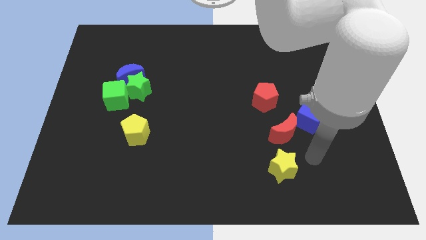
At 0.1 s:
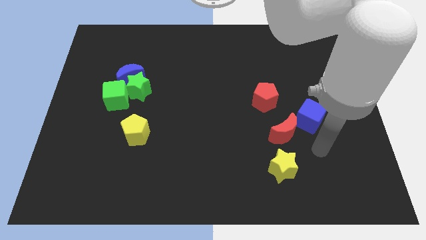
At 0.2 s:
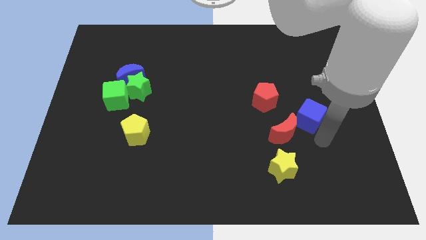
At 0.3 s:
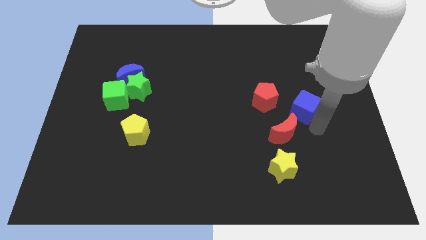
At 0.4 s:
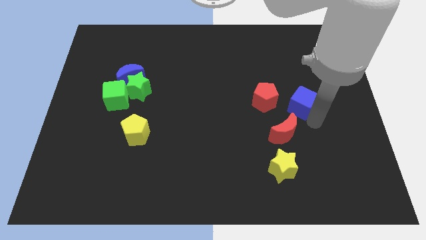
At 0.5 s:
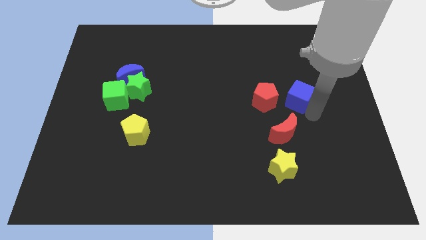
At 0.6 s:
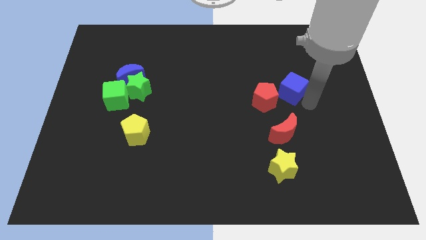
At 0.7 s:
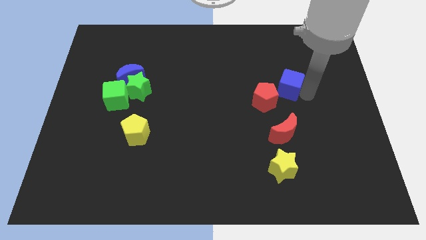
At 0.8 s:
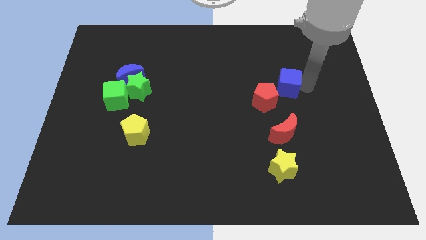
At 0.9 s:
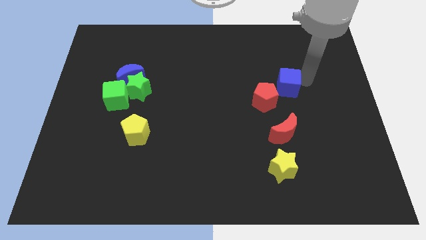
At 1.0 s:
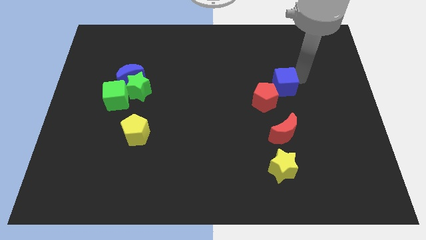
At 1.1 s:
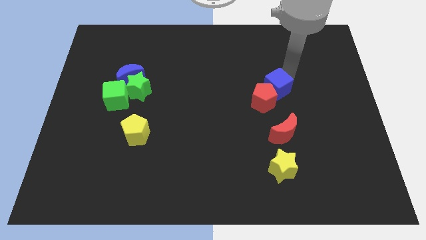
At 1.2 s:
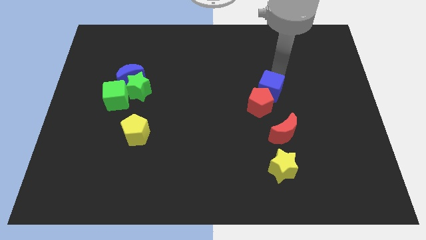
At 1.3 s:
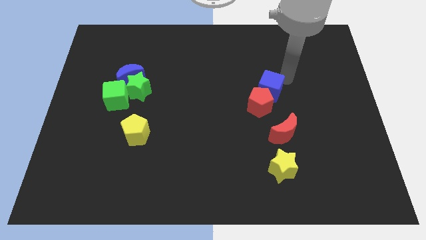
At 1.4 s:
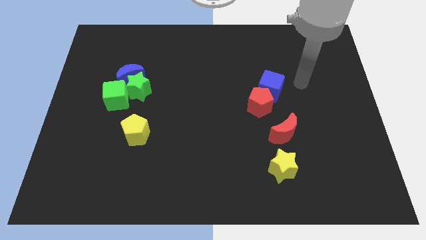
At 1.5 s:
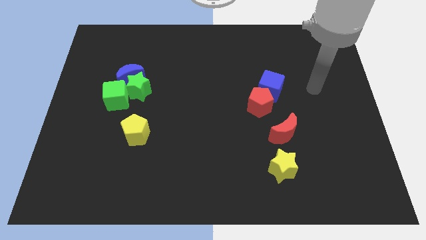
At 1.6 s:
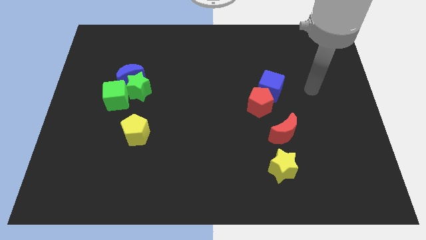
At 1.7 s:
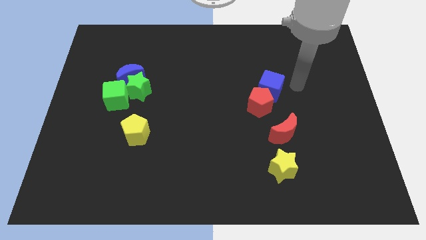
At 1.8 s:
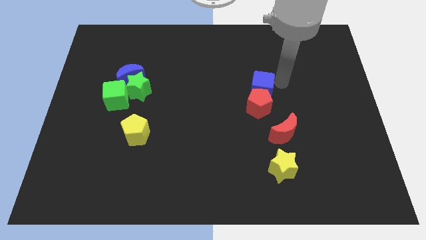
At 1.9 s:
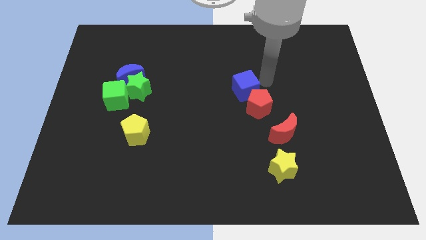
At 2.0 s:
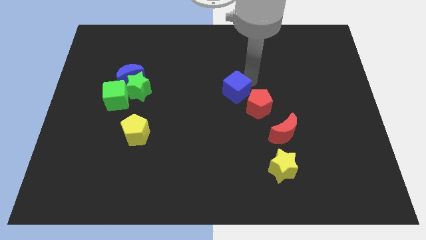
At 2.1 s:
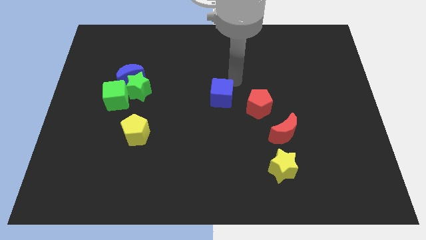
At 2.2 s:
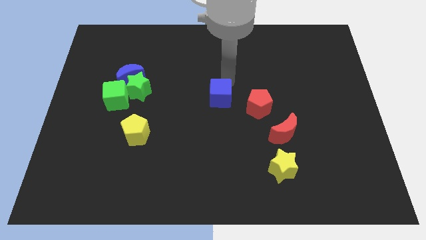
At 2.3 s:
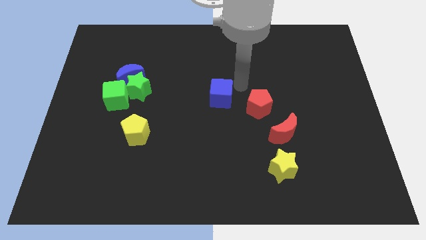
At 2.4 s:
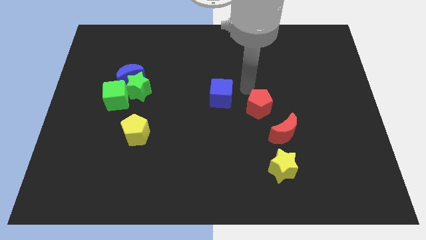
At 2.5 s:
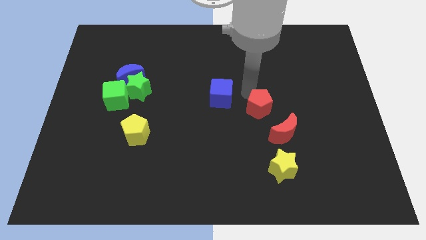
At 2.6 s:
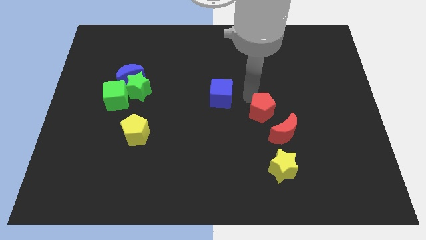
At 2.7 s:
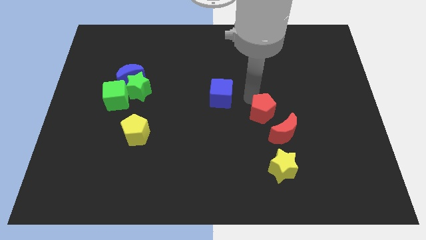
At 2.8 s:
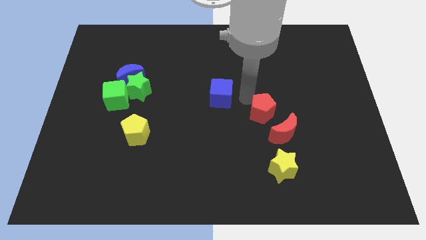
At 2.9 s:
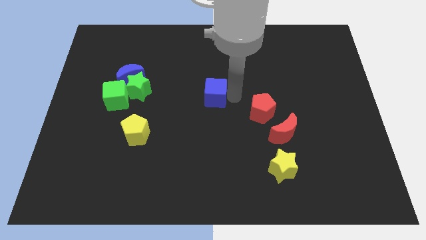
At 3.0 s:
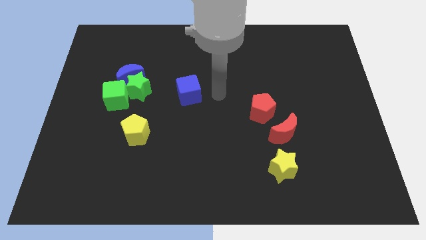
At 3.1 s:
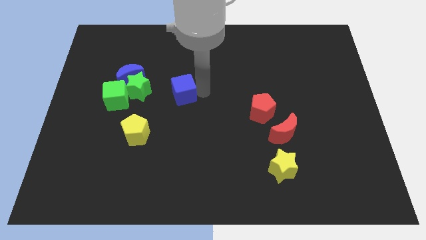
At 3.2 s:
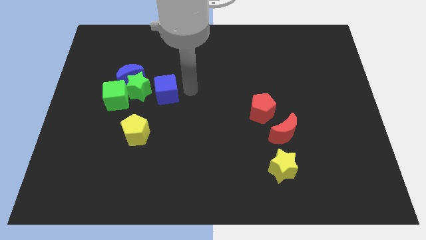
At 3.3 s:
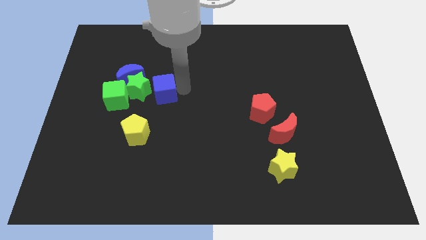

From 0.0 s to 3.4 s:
push the blue cube to the right of the green star

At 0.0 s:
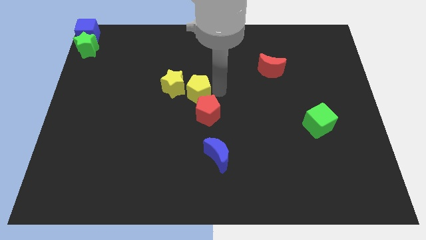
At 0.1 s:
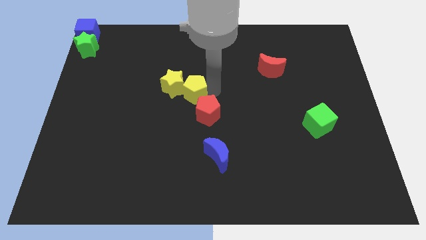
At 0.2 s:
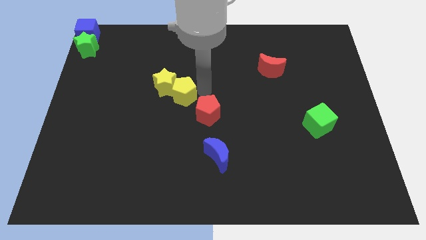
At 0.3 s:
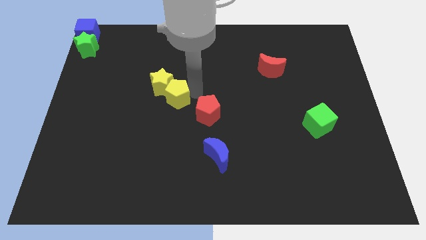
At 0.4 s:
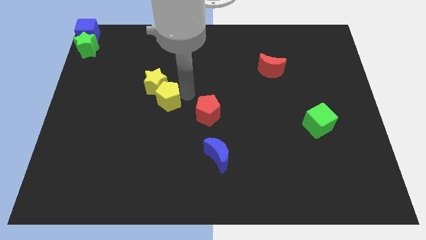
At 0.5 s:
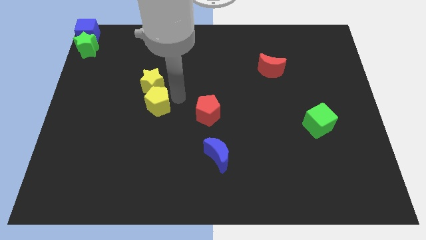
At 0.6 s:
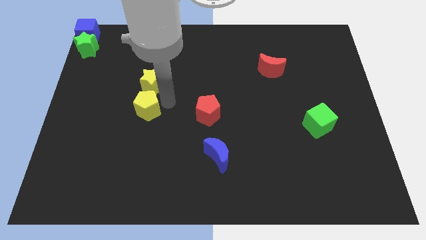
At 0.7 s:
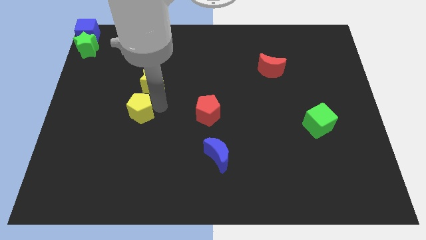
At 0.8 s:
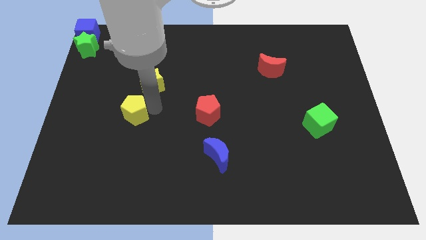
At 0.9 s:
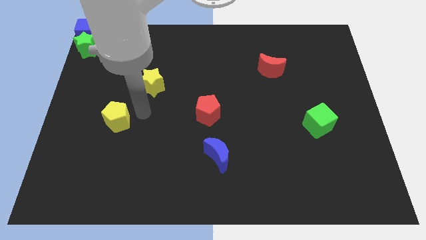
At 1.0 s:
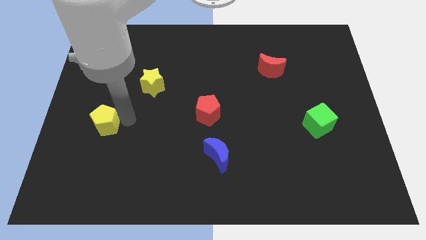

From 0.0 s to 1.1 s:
place the yellow pentagon left to the red pentagon

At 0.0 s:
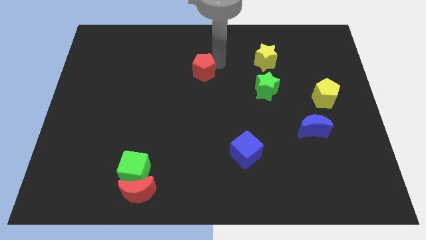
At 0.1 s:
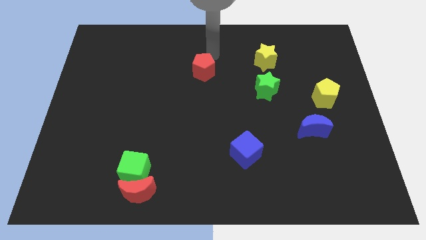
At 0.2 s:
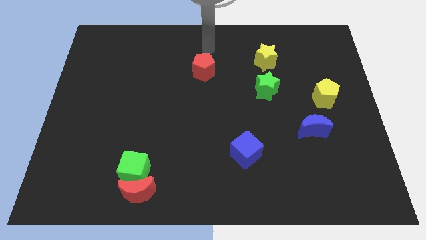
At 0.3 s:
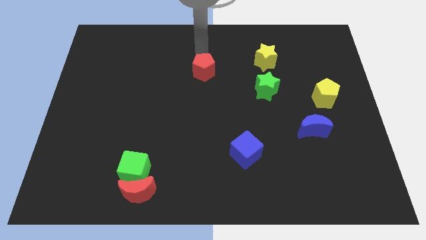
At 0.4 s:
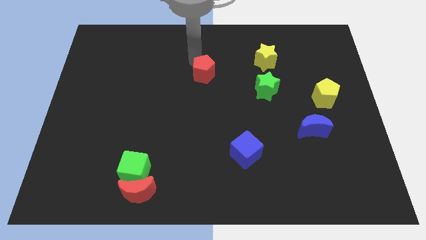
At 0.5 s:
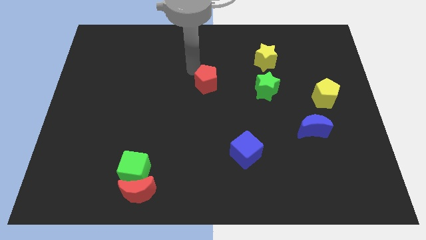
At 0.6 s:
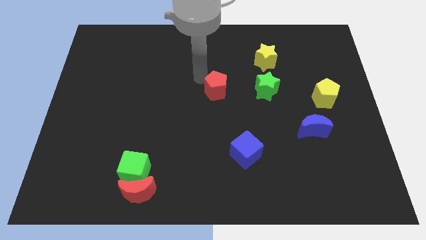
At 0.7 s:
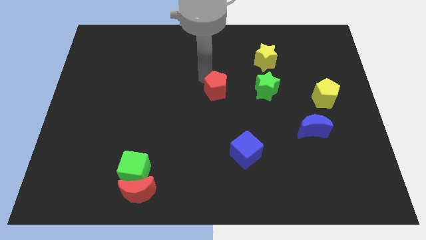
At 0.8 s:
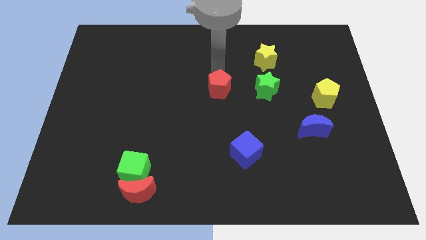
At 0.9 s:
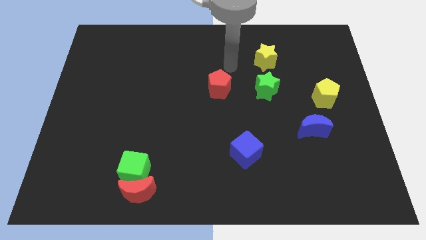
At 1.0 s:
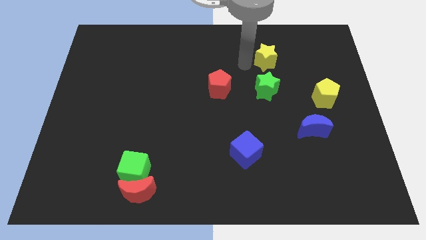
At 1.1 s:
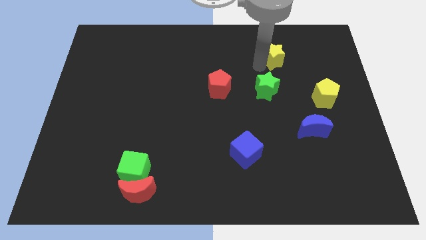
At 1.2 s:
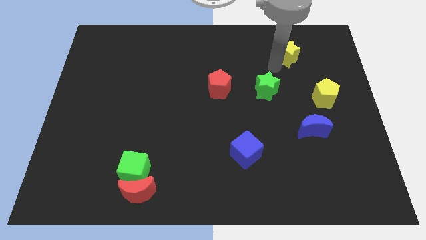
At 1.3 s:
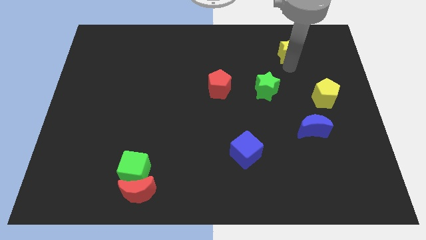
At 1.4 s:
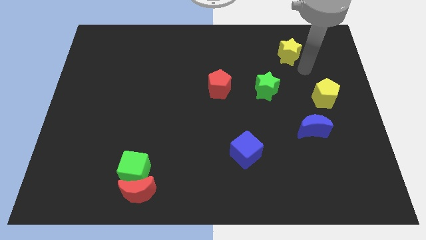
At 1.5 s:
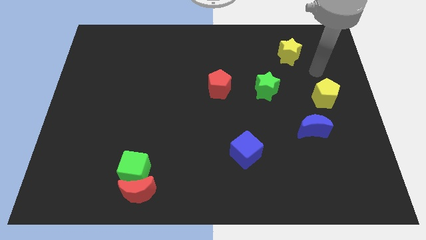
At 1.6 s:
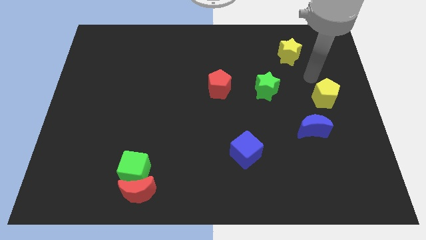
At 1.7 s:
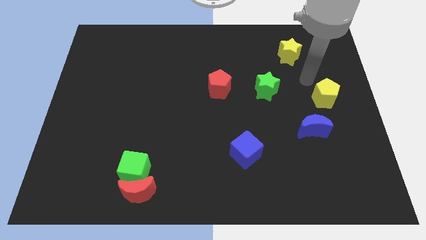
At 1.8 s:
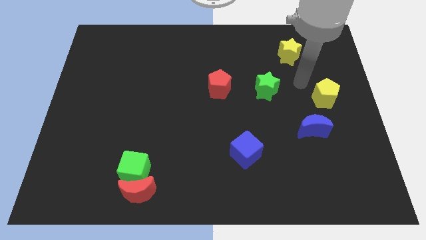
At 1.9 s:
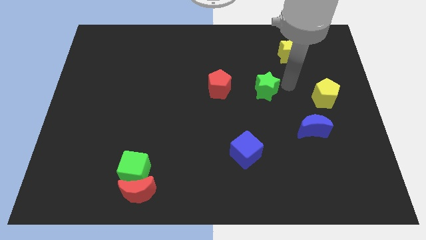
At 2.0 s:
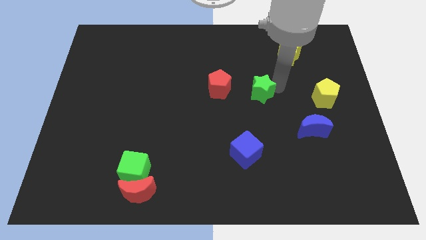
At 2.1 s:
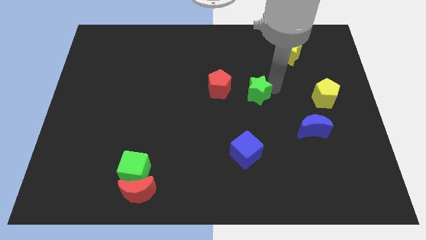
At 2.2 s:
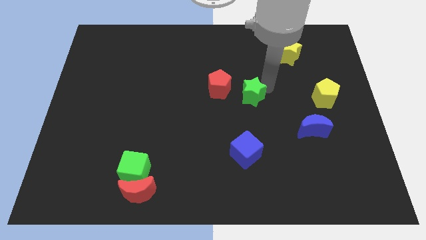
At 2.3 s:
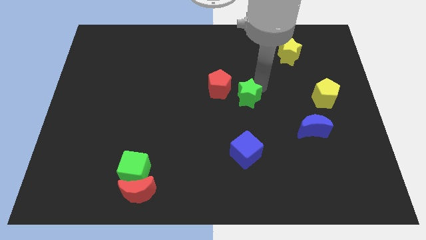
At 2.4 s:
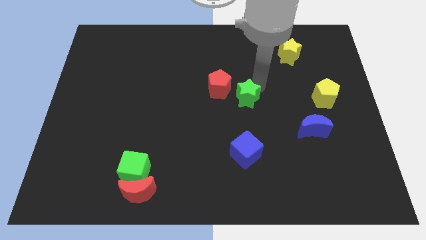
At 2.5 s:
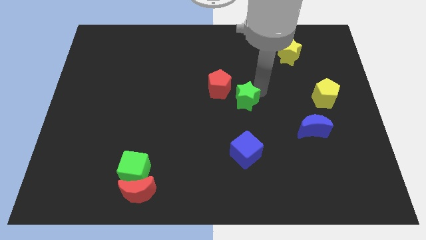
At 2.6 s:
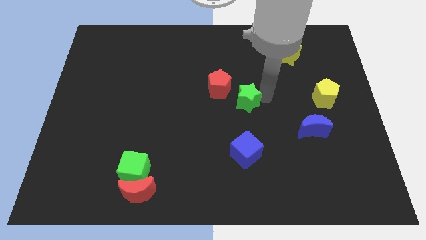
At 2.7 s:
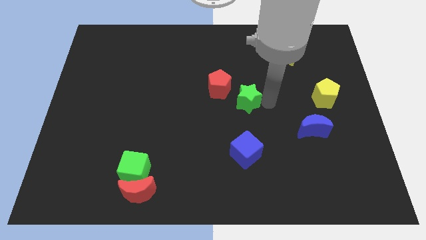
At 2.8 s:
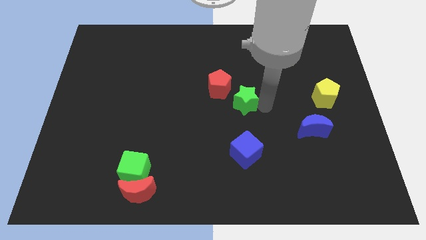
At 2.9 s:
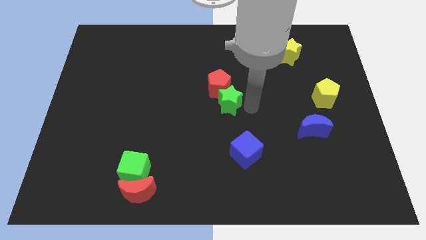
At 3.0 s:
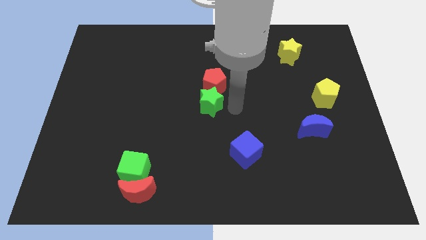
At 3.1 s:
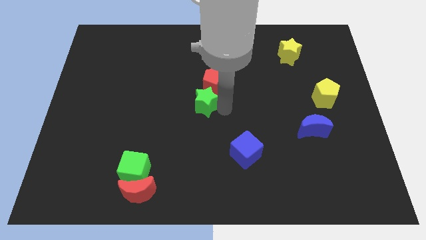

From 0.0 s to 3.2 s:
place green star close to red pentagon

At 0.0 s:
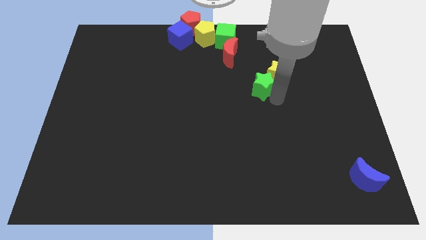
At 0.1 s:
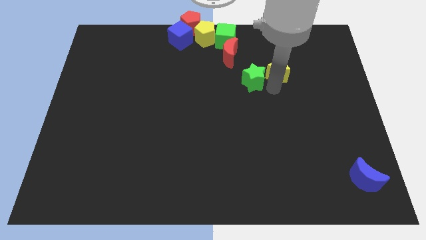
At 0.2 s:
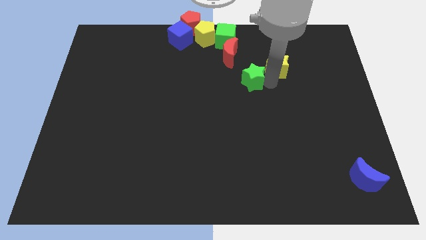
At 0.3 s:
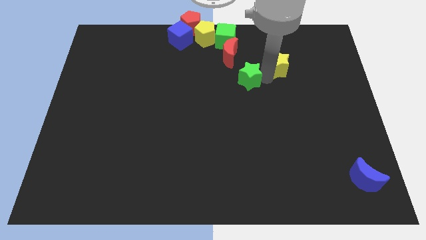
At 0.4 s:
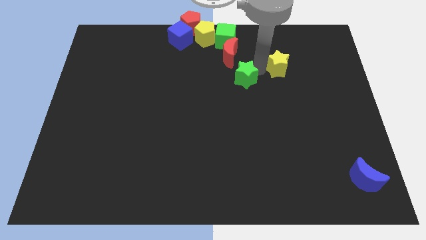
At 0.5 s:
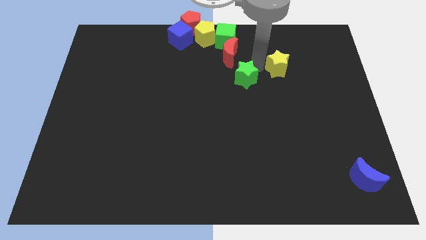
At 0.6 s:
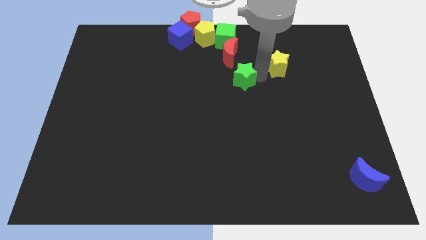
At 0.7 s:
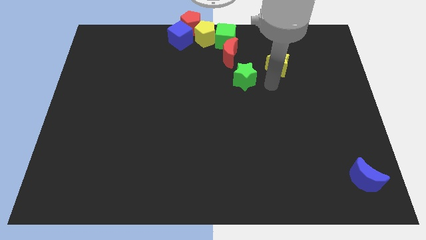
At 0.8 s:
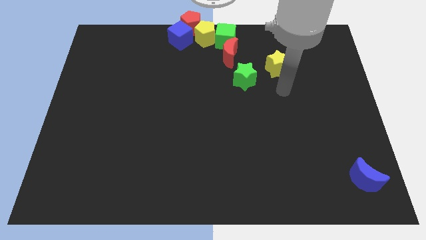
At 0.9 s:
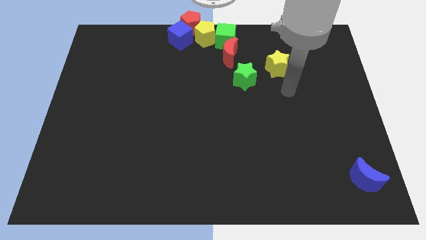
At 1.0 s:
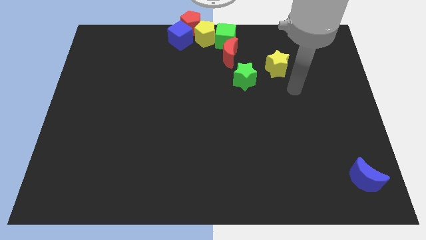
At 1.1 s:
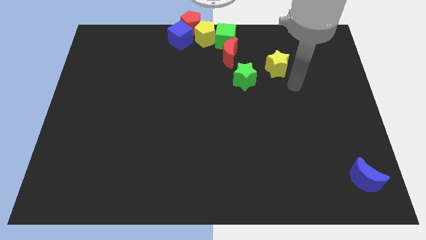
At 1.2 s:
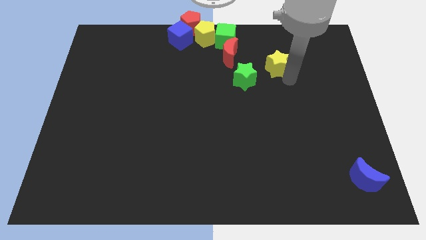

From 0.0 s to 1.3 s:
separate the green and yellow stars

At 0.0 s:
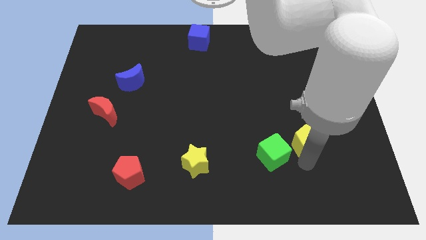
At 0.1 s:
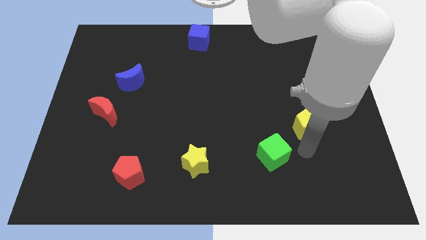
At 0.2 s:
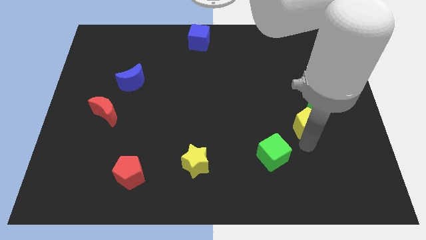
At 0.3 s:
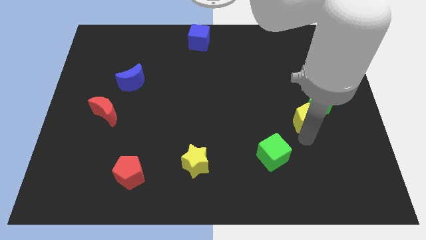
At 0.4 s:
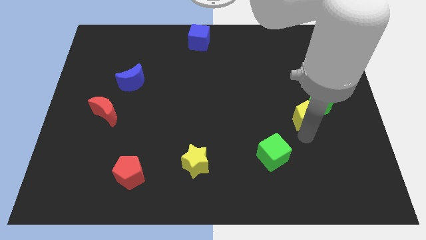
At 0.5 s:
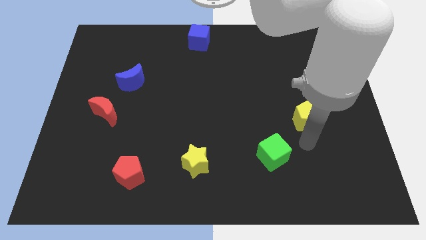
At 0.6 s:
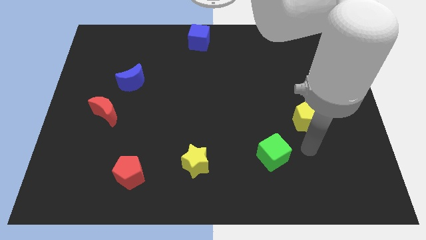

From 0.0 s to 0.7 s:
place the yellow pentagon diagonally below the green star
